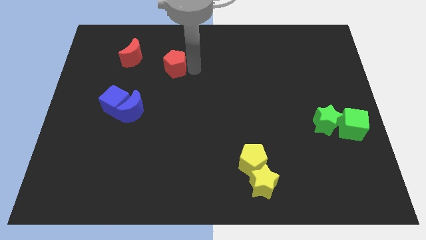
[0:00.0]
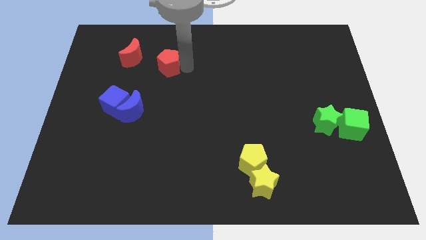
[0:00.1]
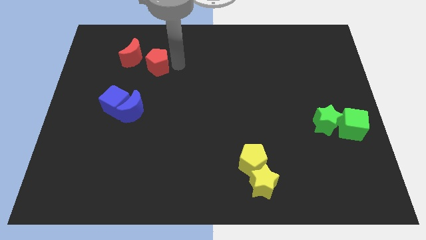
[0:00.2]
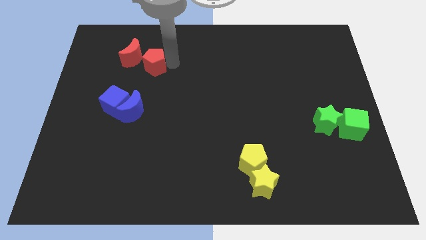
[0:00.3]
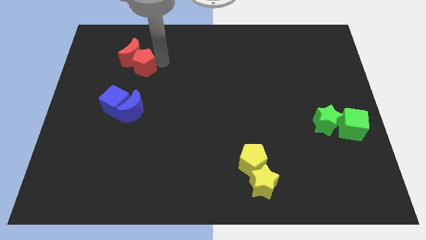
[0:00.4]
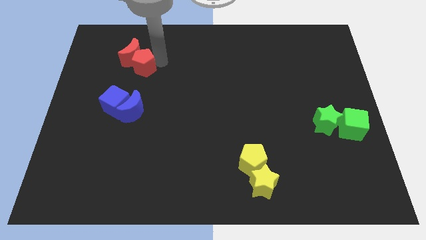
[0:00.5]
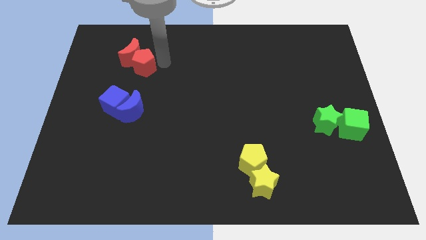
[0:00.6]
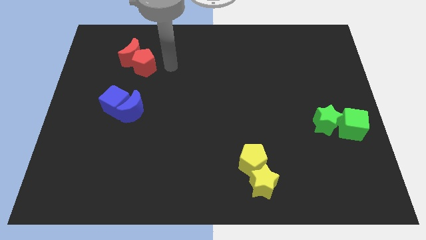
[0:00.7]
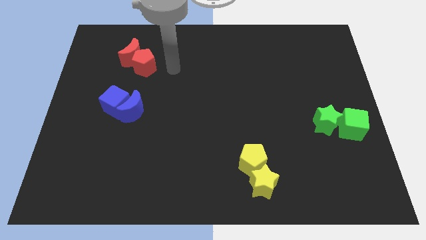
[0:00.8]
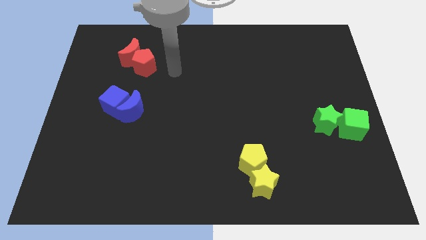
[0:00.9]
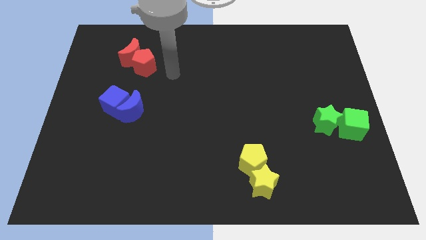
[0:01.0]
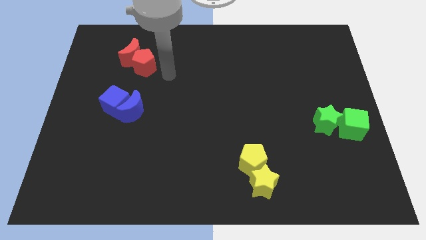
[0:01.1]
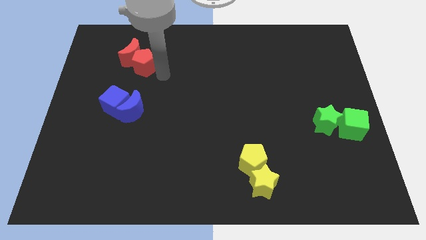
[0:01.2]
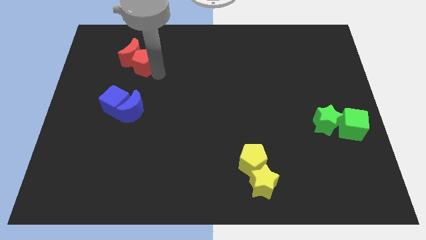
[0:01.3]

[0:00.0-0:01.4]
push the red pentagon into the red moon

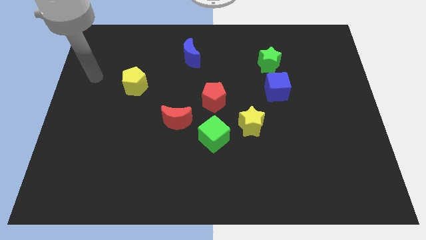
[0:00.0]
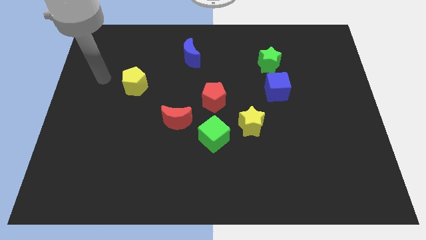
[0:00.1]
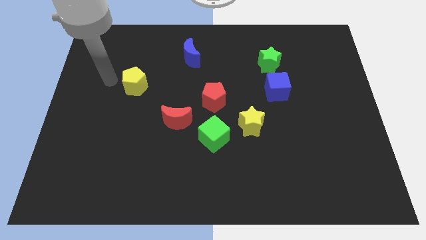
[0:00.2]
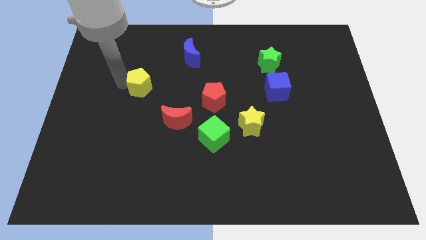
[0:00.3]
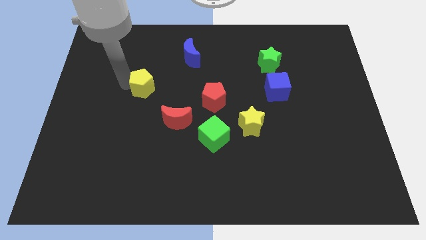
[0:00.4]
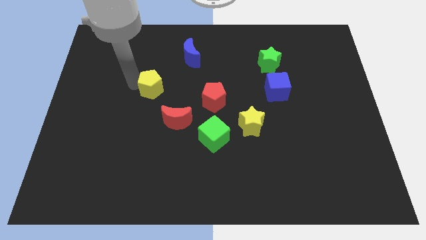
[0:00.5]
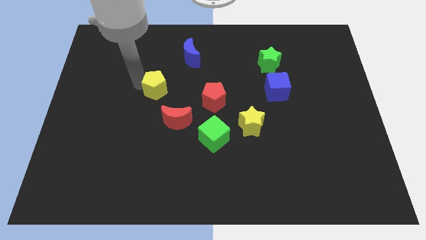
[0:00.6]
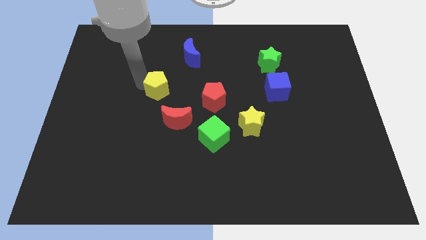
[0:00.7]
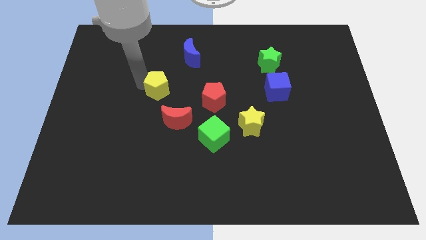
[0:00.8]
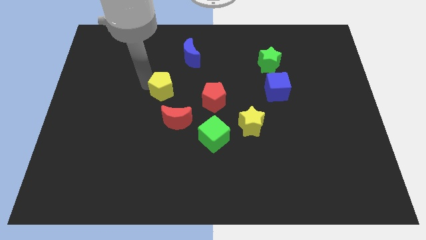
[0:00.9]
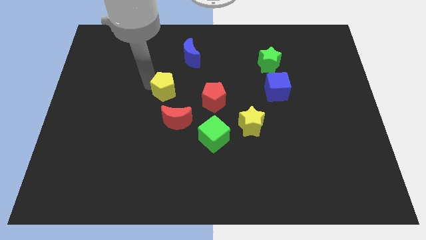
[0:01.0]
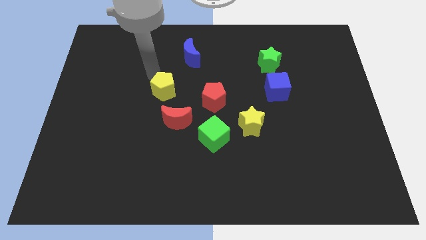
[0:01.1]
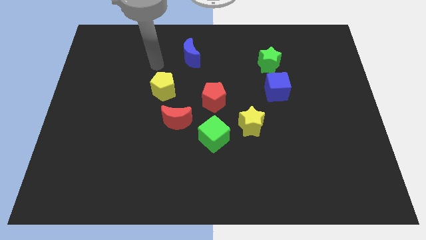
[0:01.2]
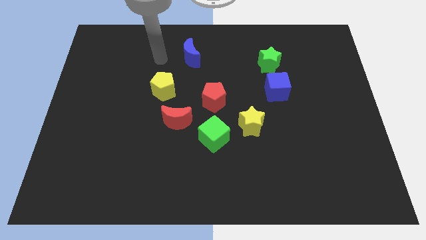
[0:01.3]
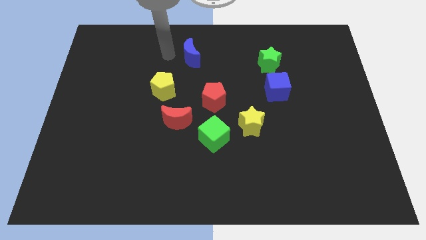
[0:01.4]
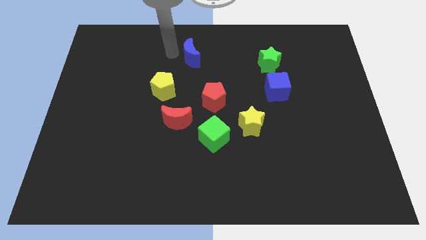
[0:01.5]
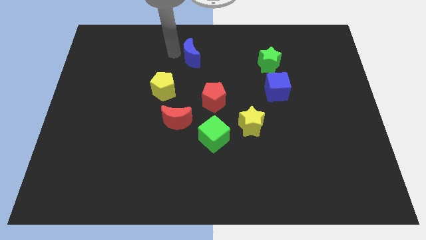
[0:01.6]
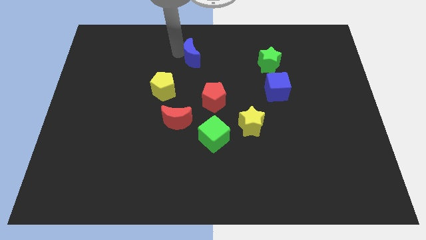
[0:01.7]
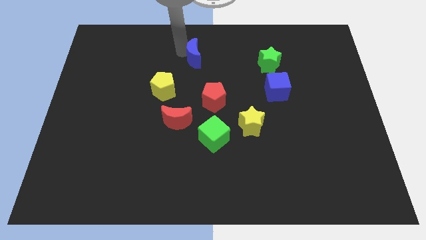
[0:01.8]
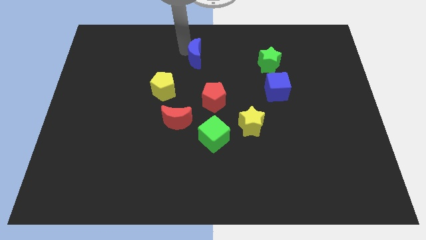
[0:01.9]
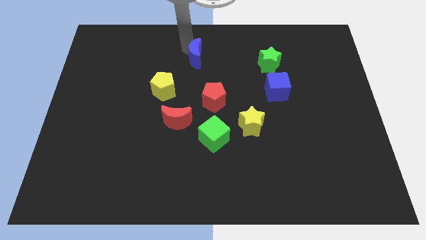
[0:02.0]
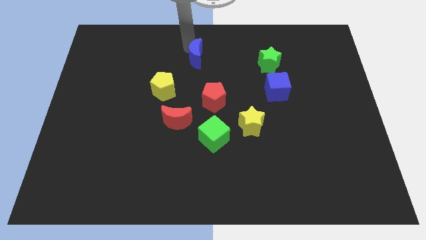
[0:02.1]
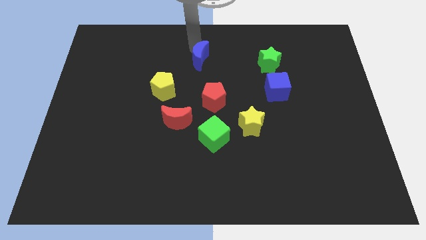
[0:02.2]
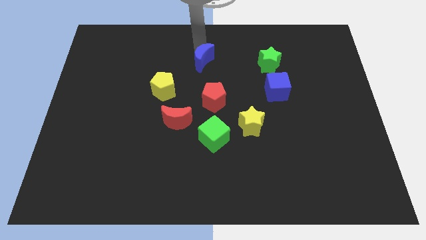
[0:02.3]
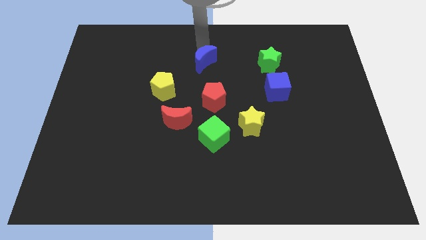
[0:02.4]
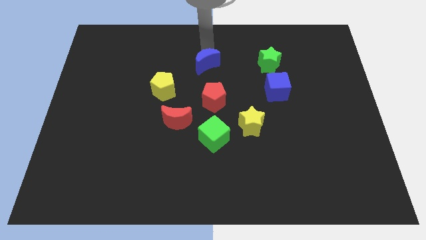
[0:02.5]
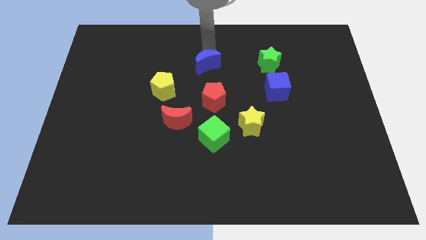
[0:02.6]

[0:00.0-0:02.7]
push the blue crescent towards the top side of the red pentagon

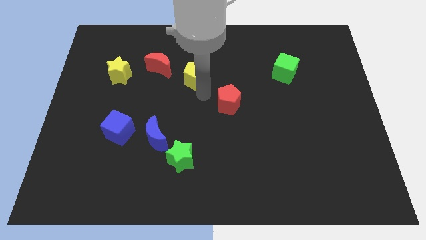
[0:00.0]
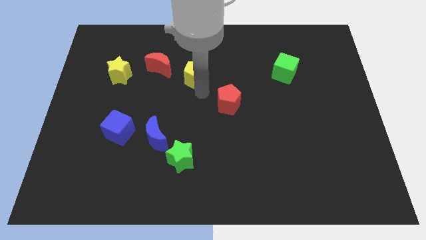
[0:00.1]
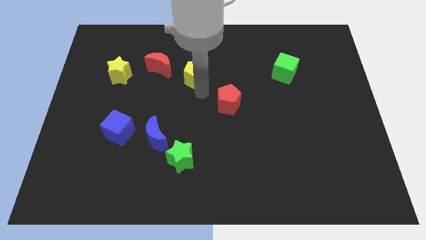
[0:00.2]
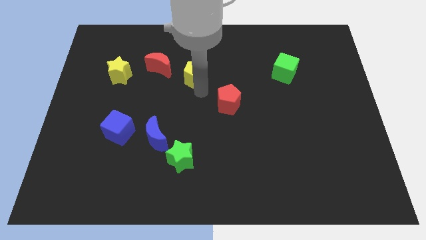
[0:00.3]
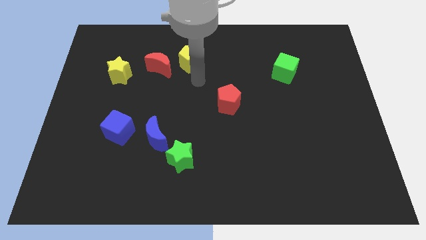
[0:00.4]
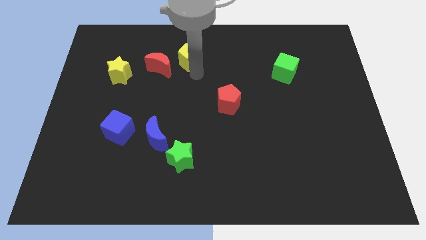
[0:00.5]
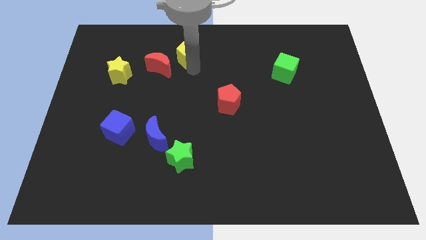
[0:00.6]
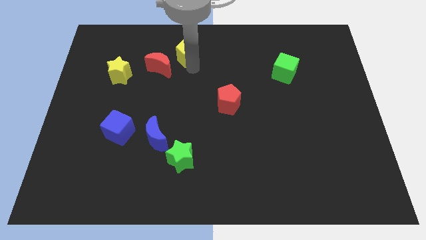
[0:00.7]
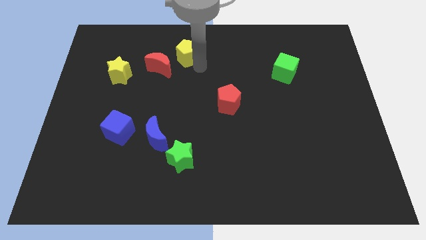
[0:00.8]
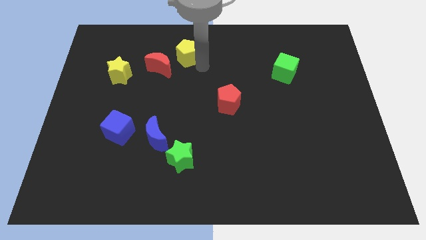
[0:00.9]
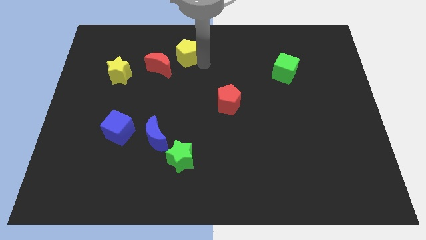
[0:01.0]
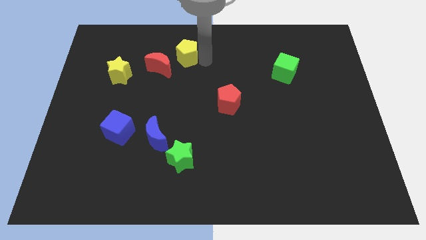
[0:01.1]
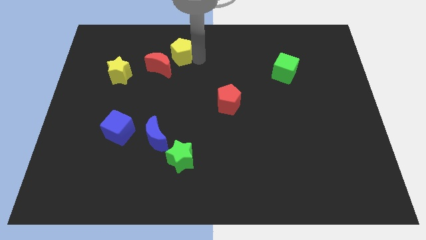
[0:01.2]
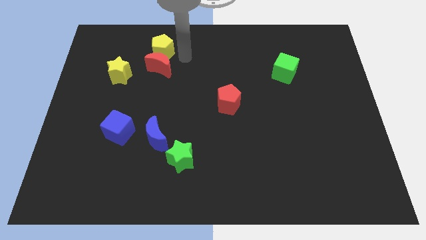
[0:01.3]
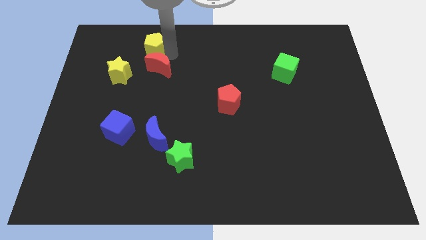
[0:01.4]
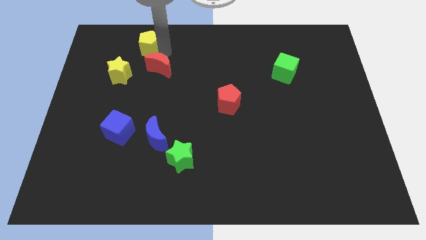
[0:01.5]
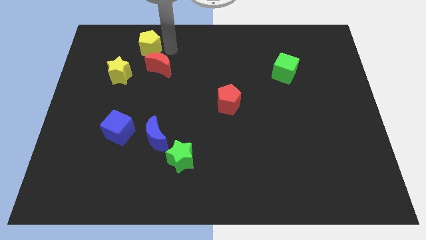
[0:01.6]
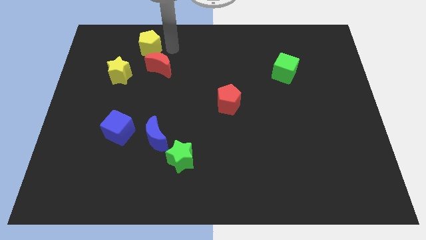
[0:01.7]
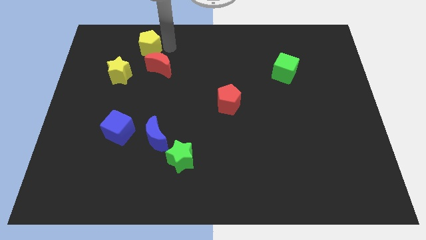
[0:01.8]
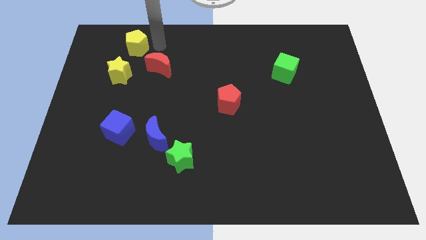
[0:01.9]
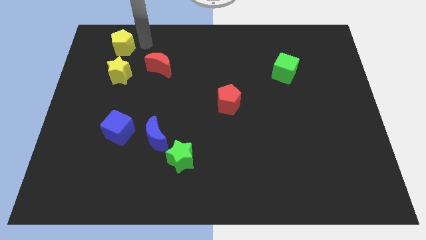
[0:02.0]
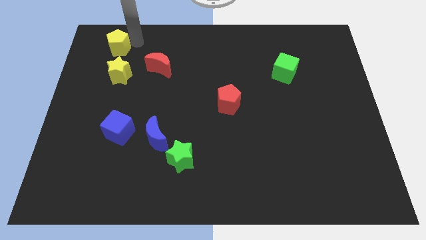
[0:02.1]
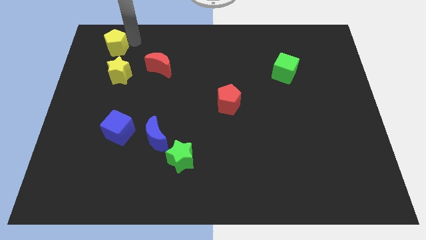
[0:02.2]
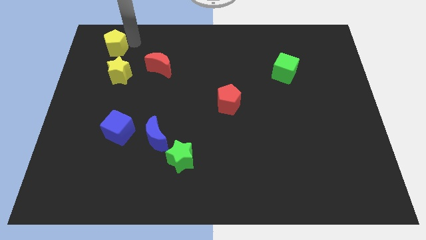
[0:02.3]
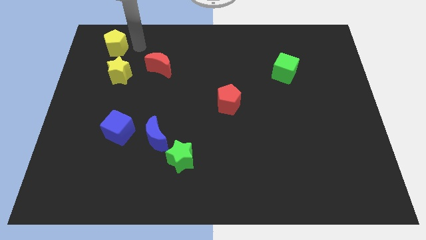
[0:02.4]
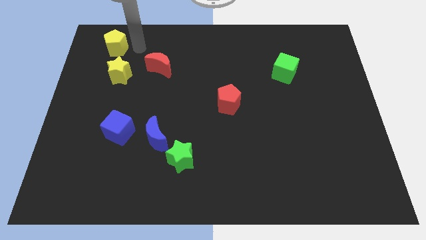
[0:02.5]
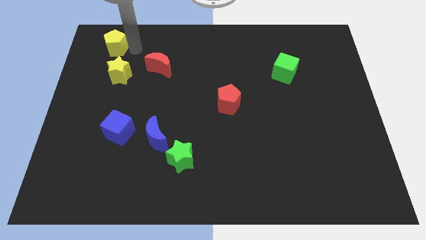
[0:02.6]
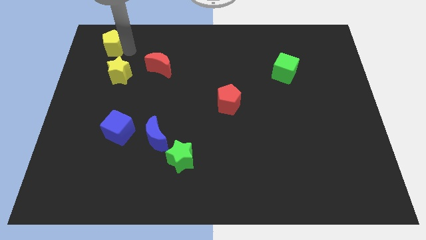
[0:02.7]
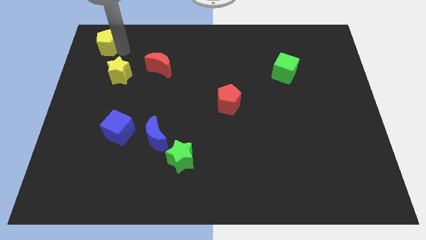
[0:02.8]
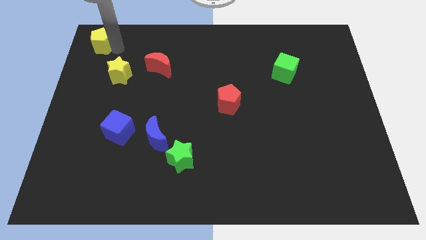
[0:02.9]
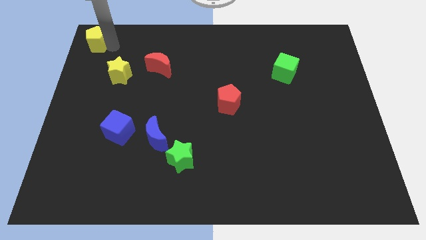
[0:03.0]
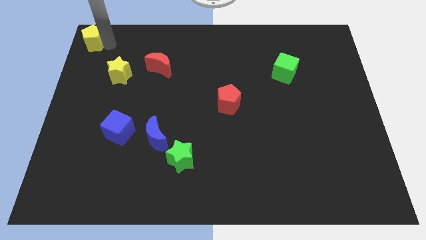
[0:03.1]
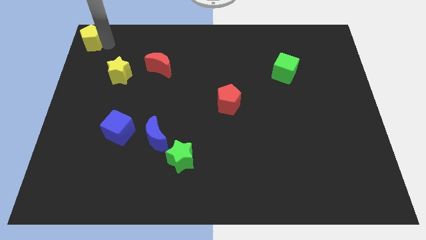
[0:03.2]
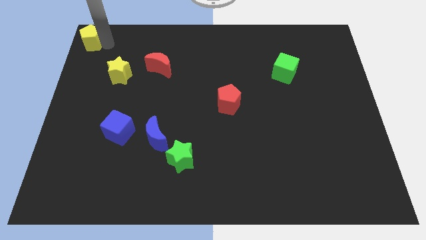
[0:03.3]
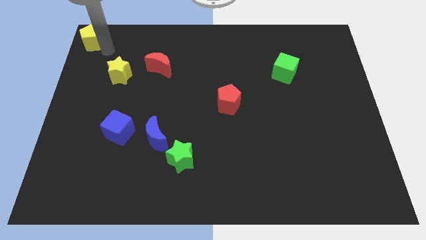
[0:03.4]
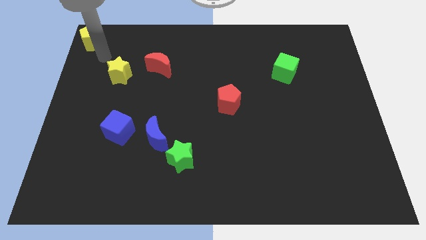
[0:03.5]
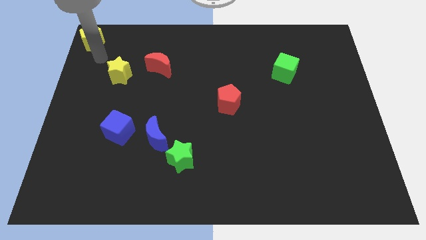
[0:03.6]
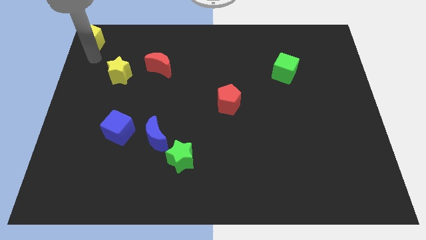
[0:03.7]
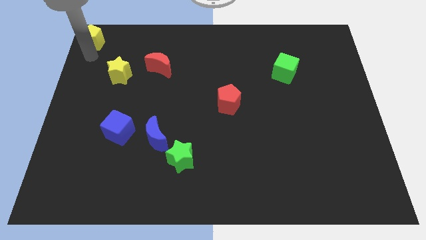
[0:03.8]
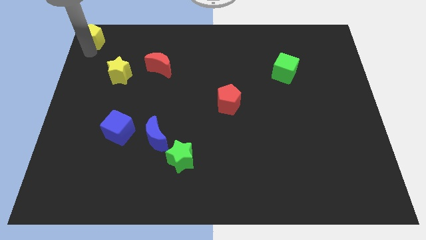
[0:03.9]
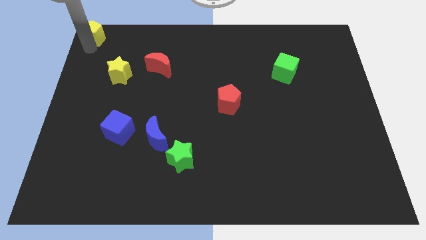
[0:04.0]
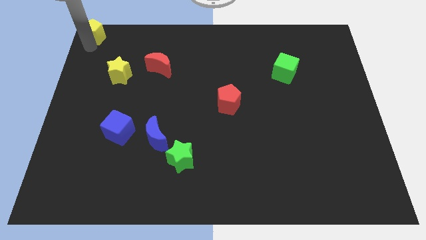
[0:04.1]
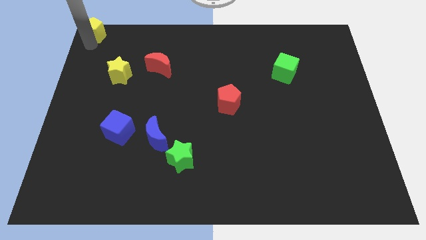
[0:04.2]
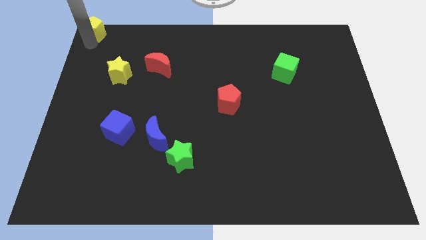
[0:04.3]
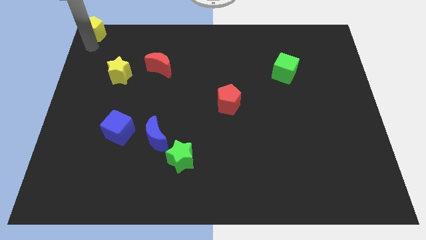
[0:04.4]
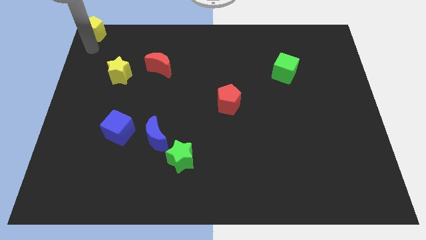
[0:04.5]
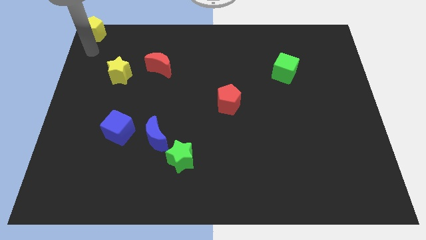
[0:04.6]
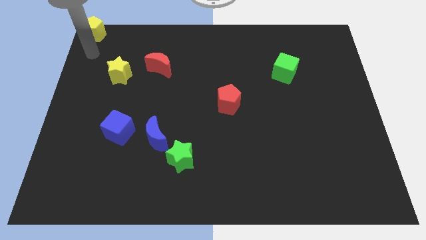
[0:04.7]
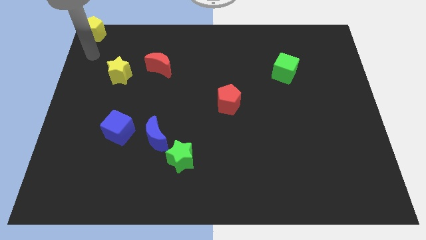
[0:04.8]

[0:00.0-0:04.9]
move yellow pentagon to the top left corner
